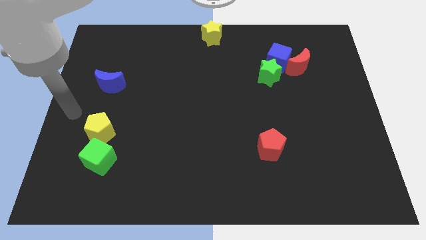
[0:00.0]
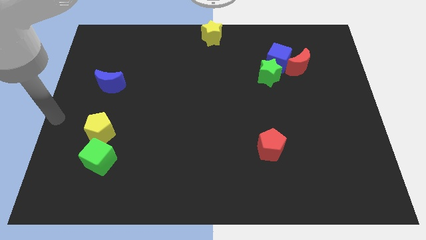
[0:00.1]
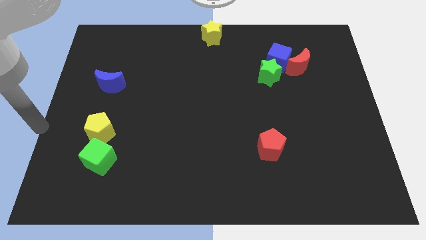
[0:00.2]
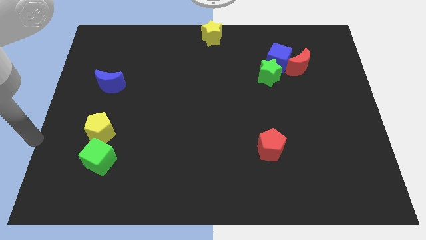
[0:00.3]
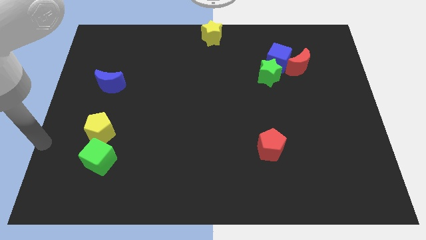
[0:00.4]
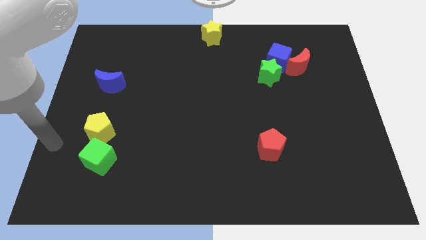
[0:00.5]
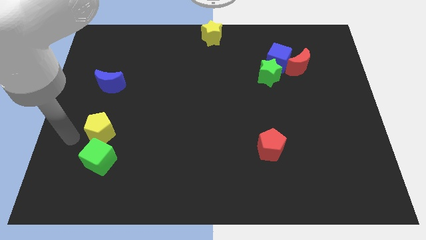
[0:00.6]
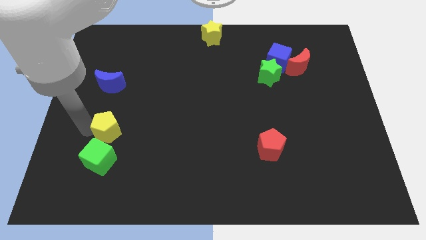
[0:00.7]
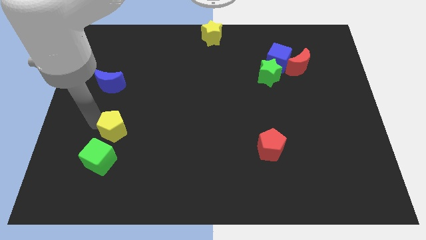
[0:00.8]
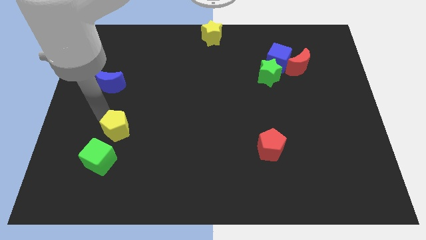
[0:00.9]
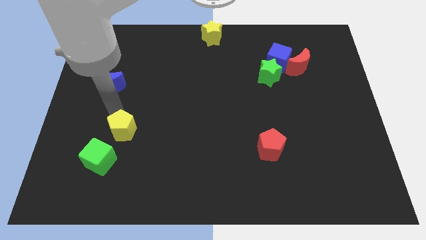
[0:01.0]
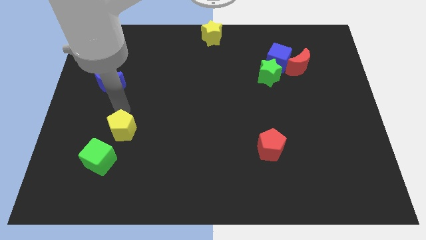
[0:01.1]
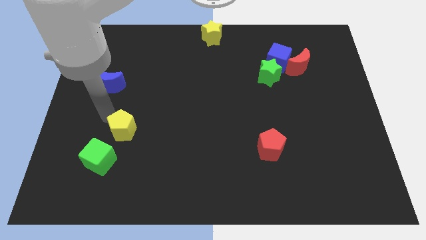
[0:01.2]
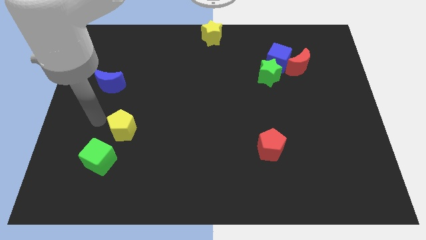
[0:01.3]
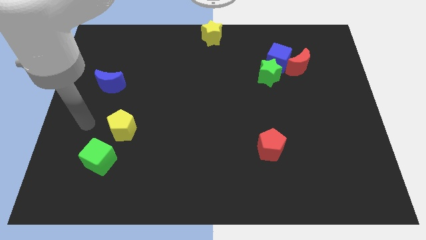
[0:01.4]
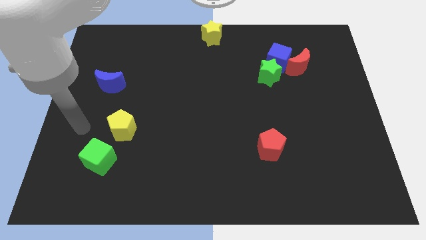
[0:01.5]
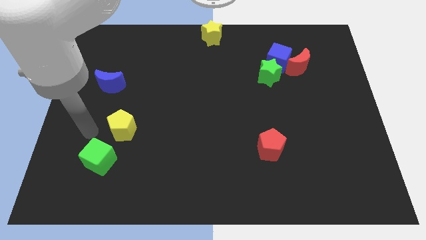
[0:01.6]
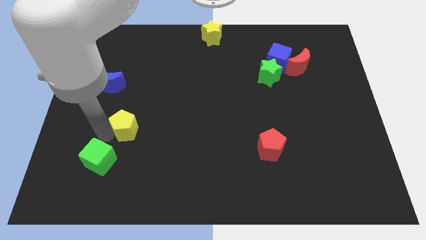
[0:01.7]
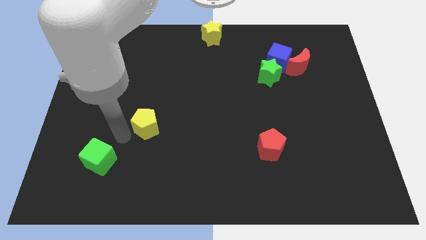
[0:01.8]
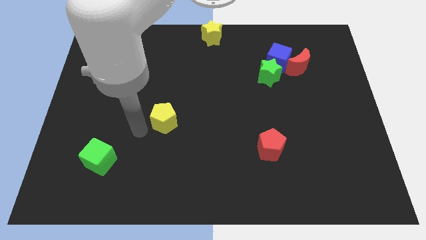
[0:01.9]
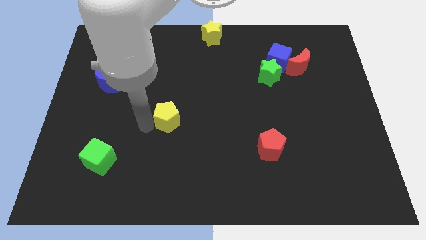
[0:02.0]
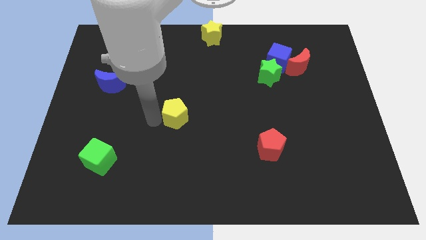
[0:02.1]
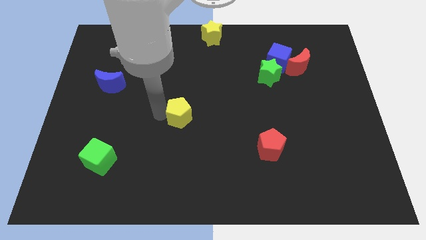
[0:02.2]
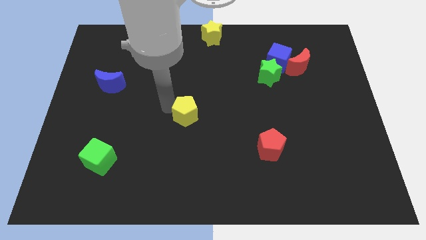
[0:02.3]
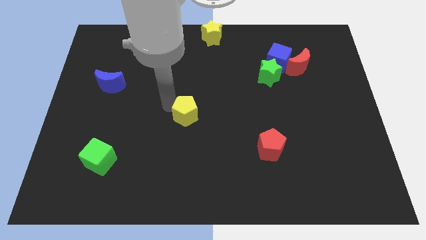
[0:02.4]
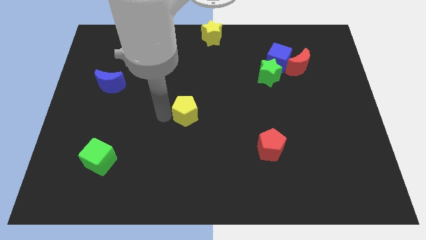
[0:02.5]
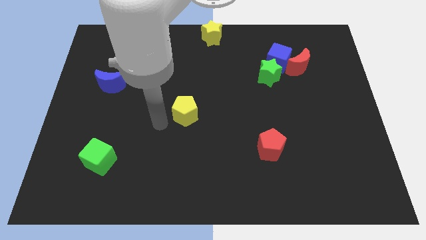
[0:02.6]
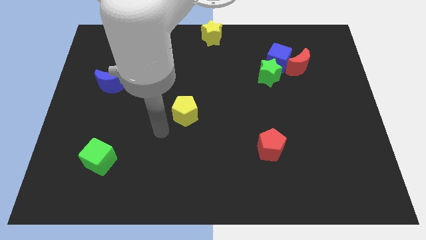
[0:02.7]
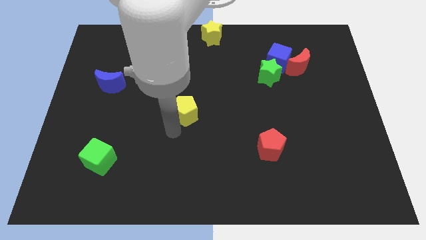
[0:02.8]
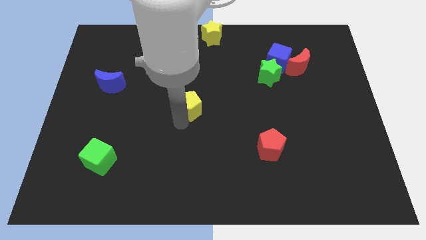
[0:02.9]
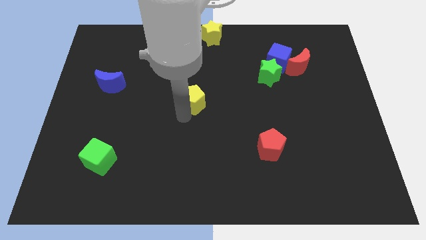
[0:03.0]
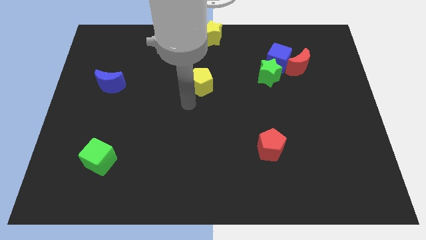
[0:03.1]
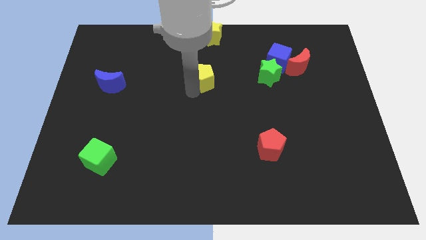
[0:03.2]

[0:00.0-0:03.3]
move yellow pentagon towards yellow star

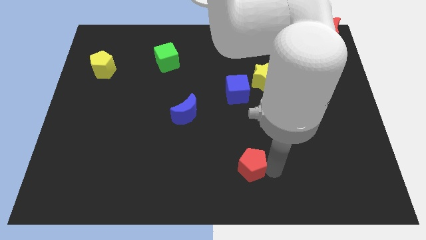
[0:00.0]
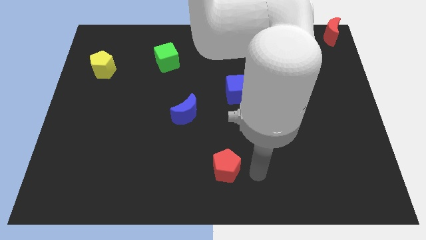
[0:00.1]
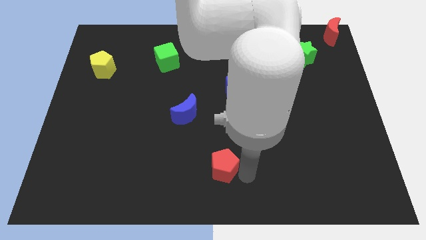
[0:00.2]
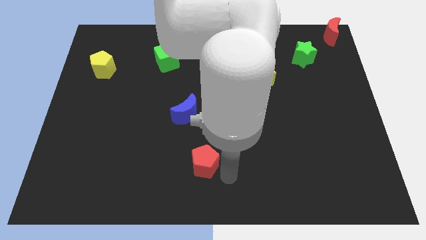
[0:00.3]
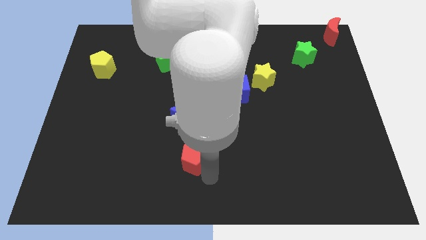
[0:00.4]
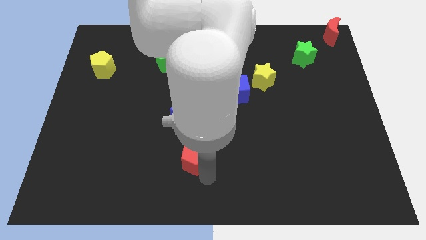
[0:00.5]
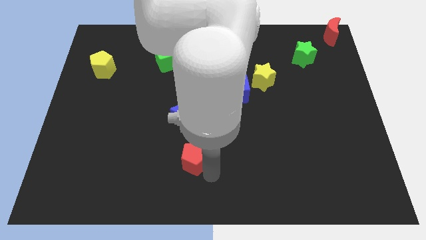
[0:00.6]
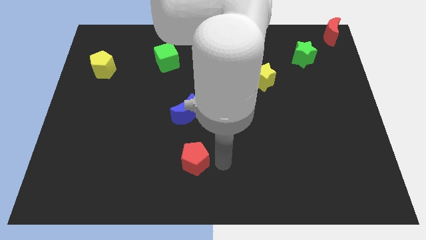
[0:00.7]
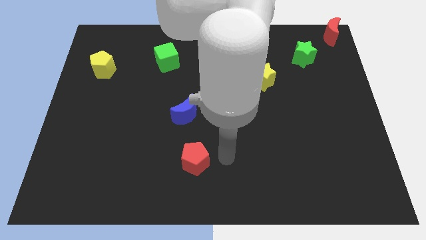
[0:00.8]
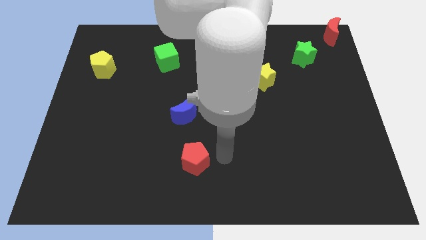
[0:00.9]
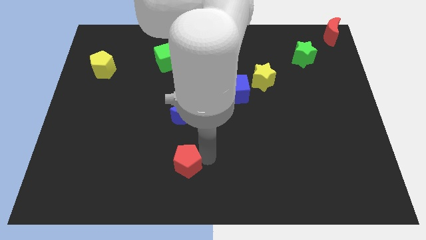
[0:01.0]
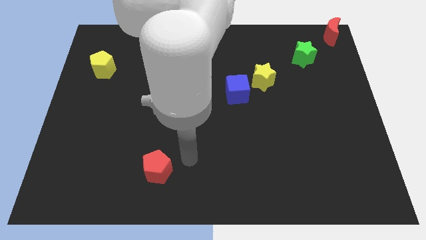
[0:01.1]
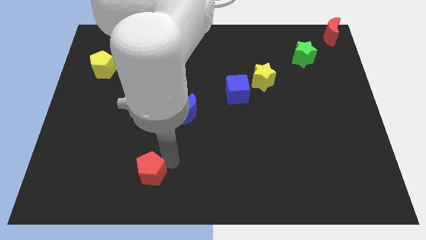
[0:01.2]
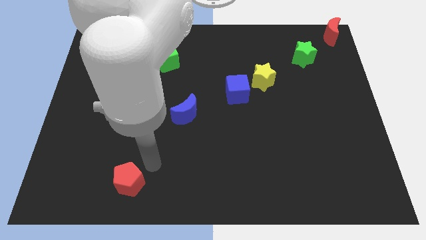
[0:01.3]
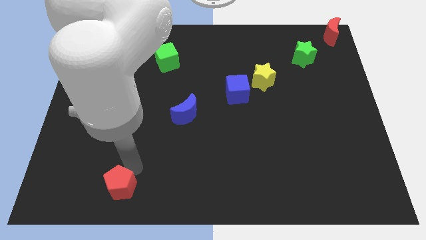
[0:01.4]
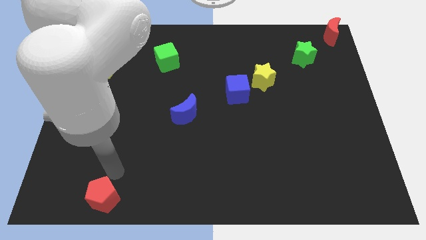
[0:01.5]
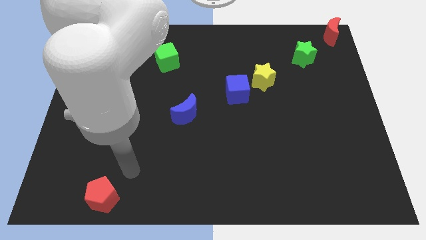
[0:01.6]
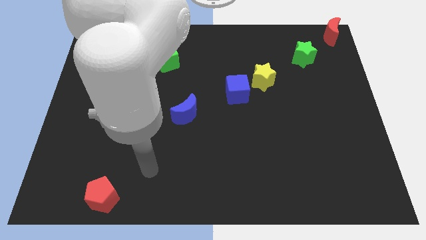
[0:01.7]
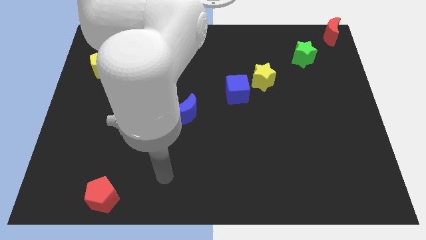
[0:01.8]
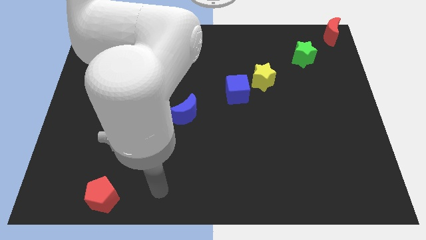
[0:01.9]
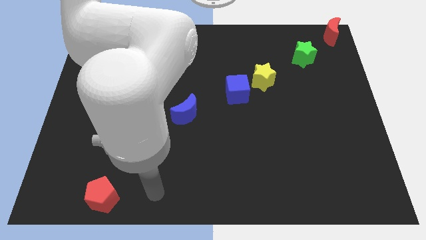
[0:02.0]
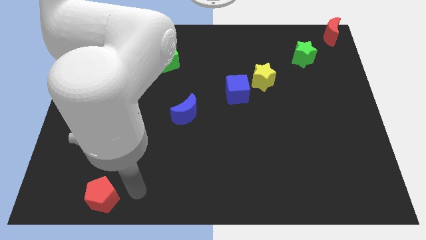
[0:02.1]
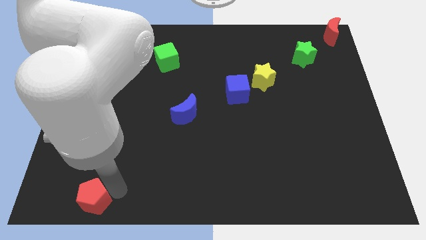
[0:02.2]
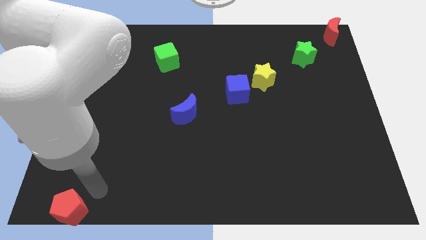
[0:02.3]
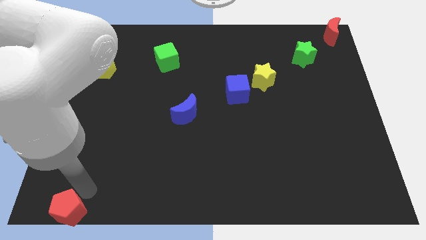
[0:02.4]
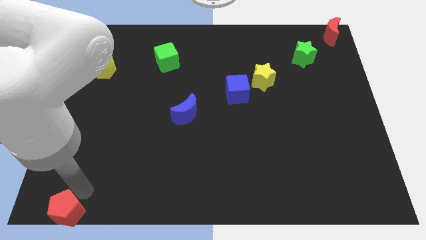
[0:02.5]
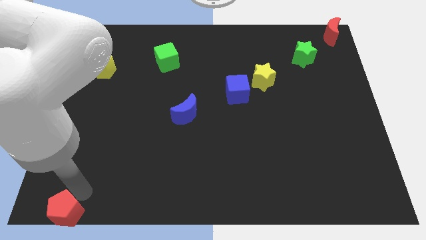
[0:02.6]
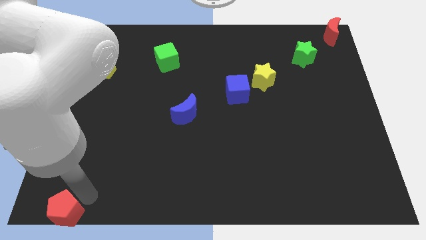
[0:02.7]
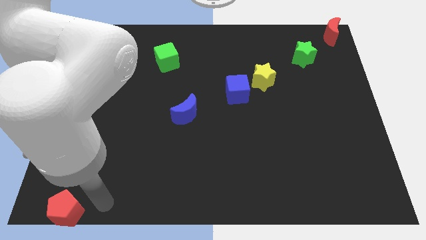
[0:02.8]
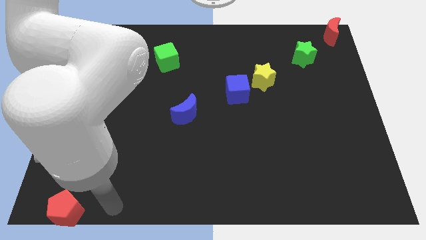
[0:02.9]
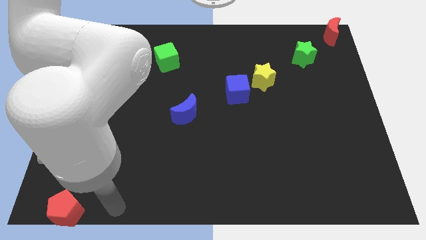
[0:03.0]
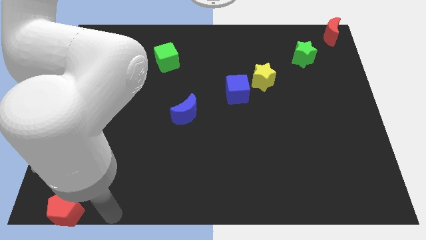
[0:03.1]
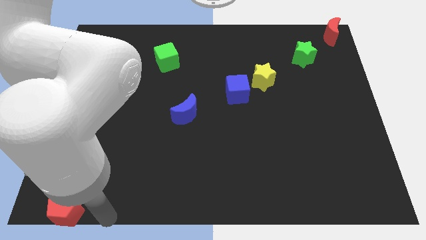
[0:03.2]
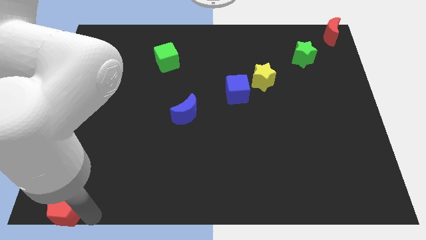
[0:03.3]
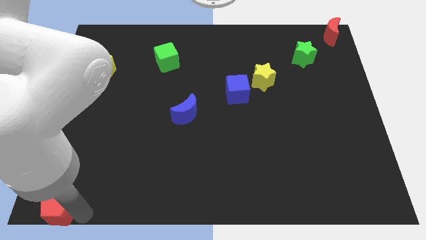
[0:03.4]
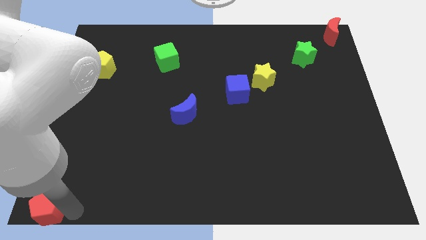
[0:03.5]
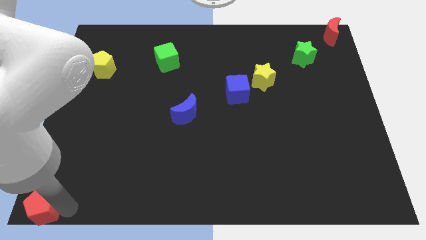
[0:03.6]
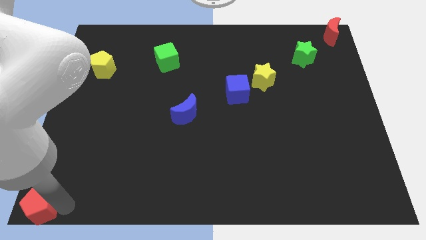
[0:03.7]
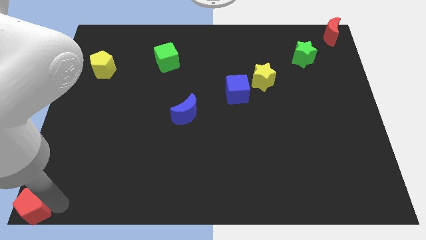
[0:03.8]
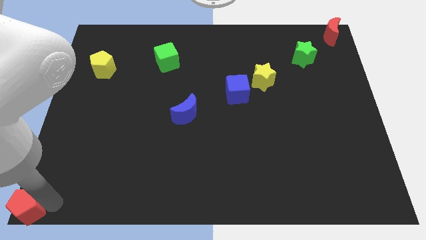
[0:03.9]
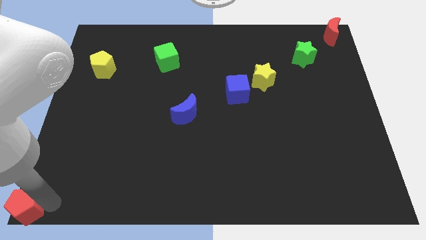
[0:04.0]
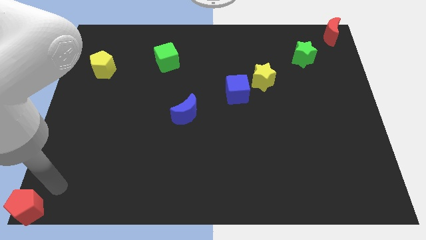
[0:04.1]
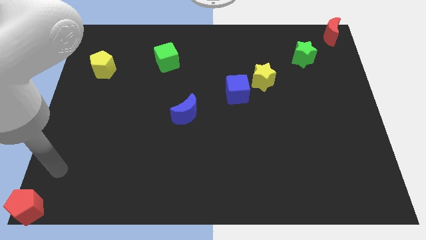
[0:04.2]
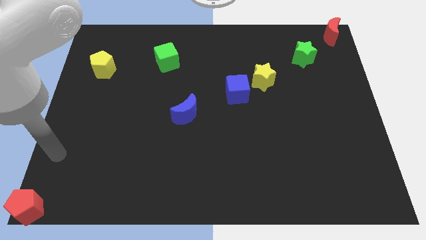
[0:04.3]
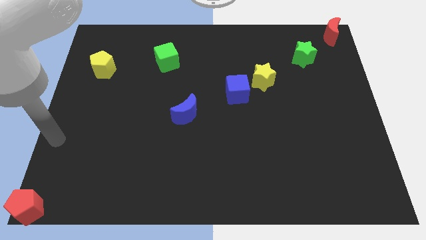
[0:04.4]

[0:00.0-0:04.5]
move the red pentagon towards the bottom left corner of the board

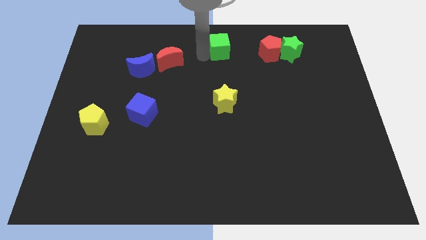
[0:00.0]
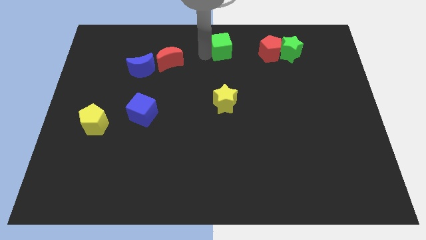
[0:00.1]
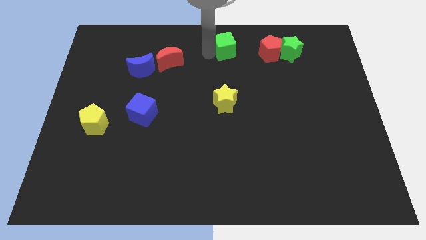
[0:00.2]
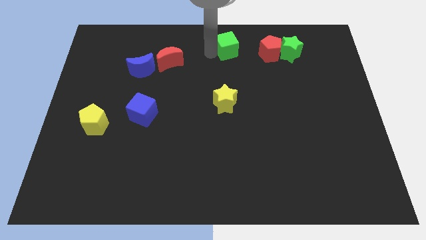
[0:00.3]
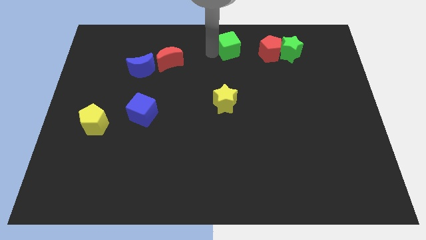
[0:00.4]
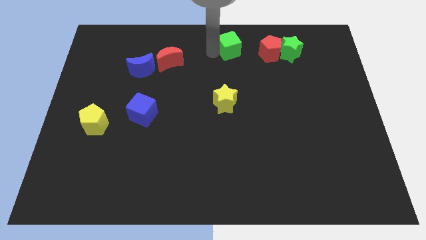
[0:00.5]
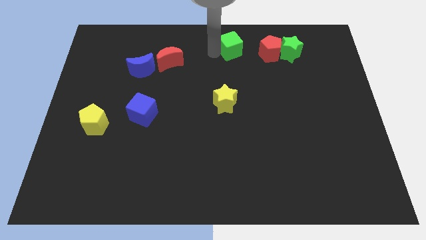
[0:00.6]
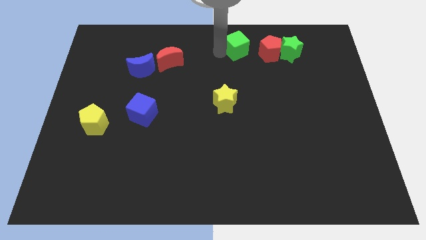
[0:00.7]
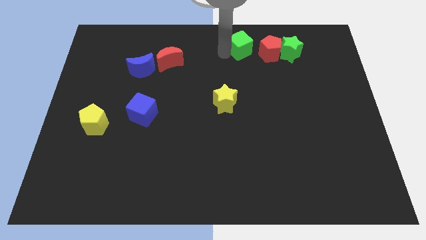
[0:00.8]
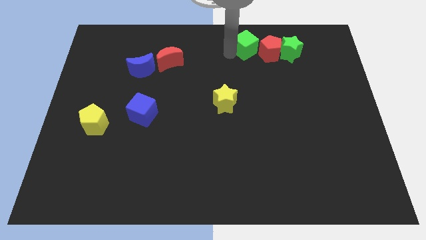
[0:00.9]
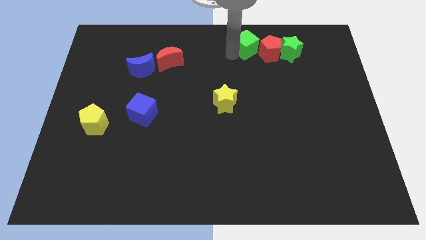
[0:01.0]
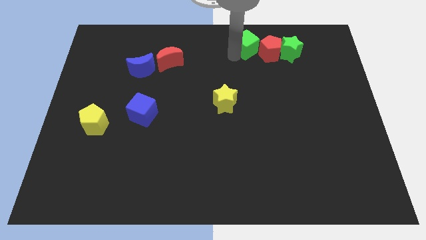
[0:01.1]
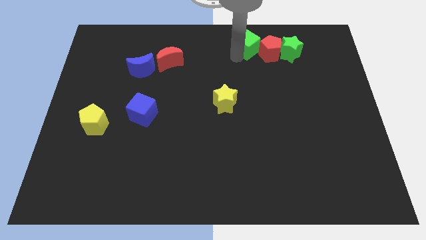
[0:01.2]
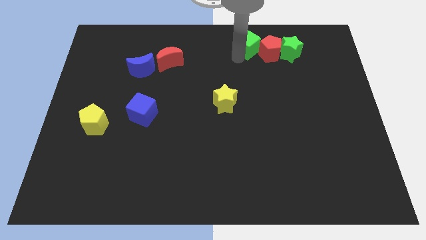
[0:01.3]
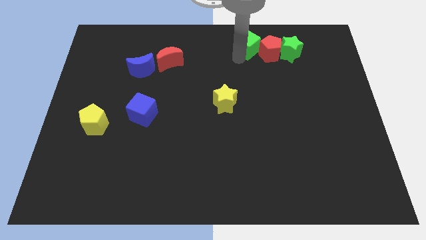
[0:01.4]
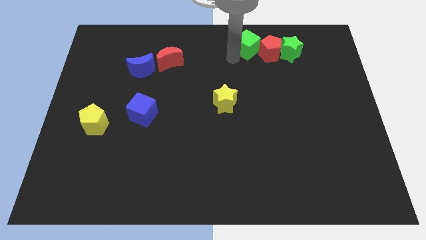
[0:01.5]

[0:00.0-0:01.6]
push the green cube into the red pentagon
